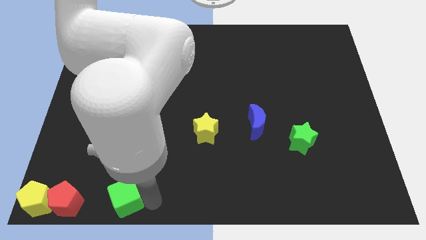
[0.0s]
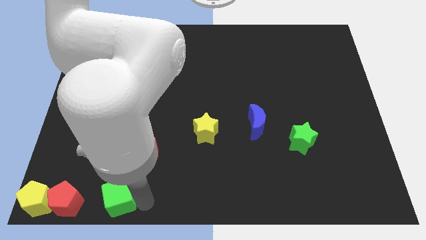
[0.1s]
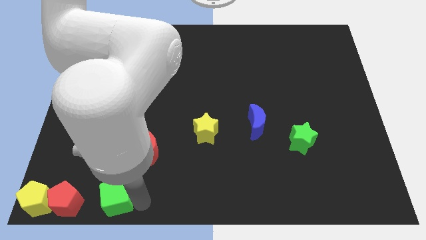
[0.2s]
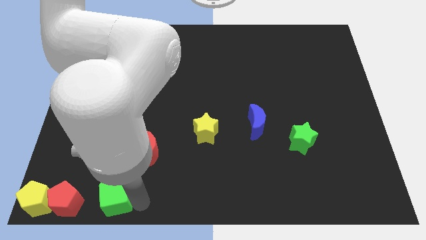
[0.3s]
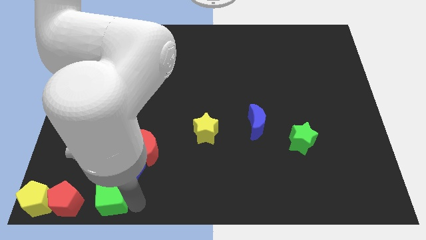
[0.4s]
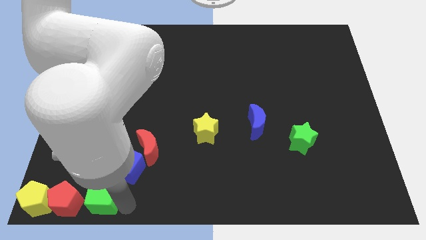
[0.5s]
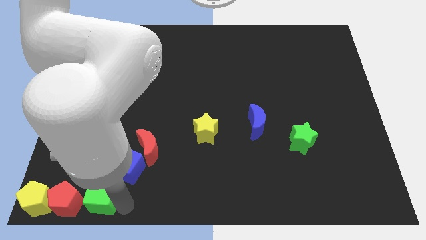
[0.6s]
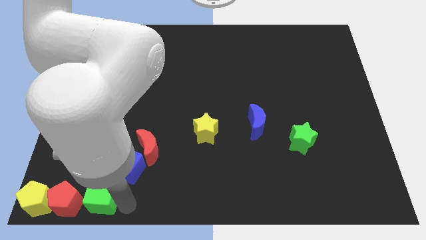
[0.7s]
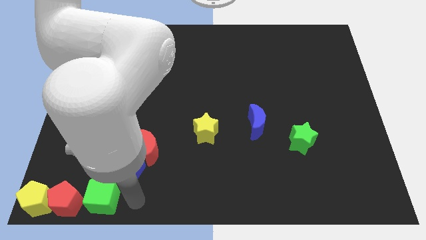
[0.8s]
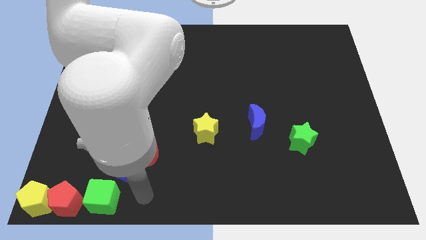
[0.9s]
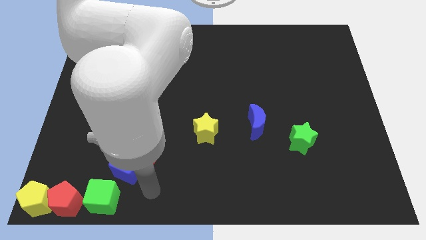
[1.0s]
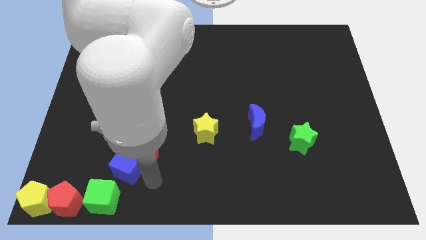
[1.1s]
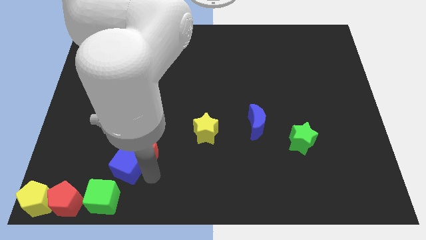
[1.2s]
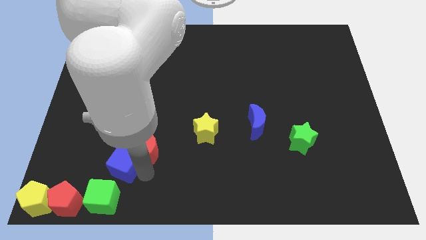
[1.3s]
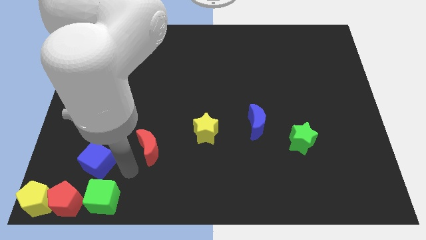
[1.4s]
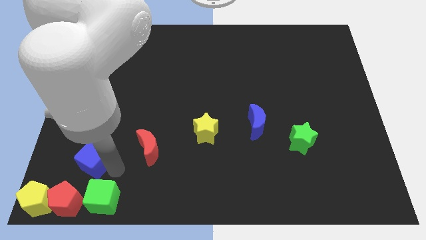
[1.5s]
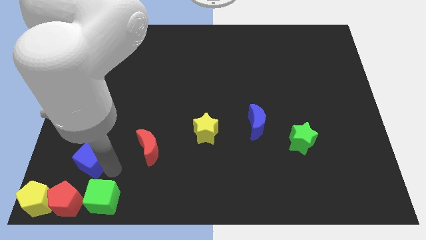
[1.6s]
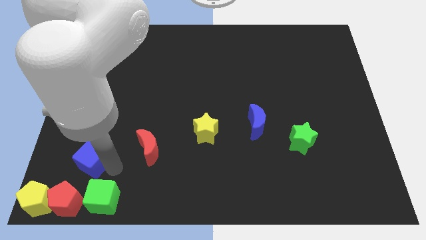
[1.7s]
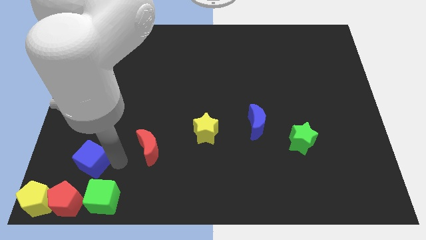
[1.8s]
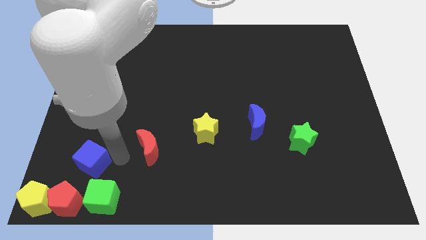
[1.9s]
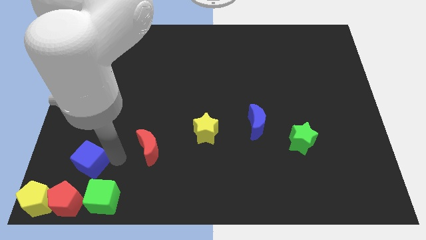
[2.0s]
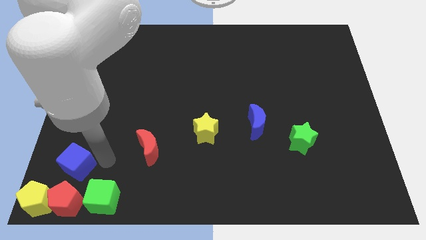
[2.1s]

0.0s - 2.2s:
separate the blue cube from the horizontal line

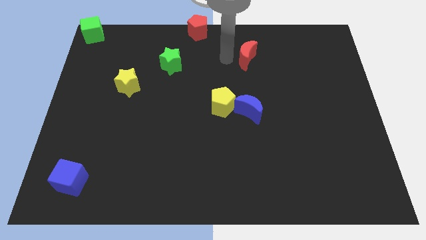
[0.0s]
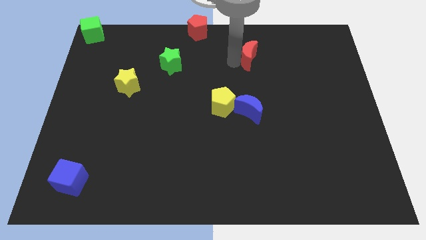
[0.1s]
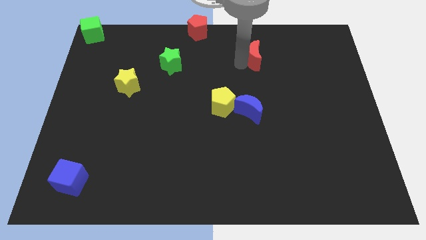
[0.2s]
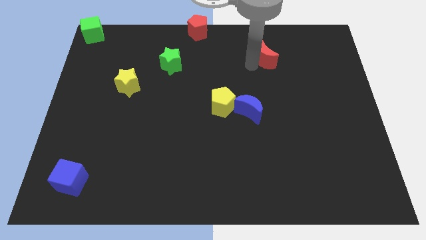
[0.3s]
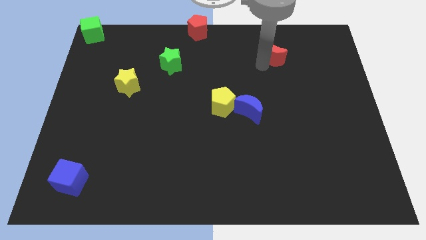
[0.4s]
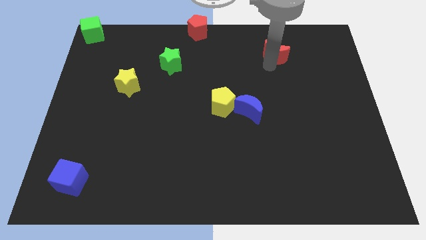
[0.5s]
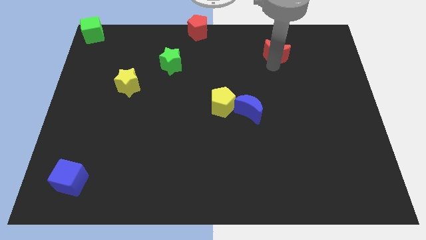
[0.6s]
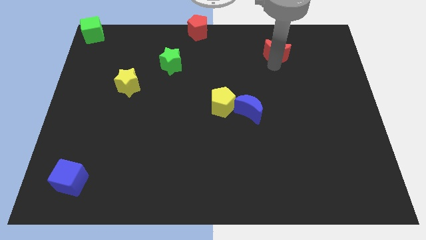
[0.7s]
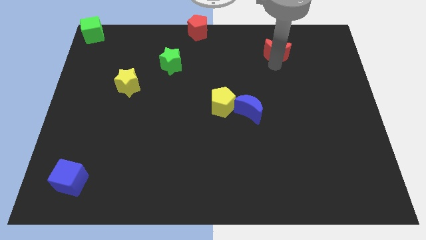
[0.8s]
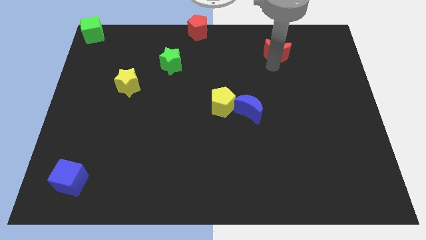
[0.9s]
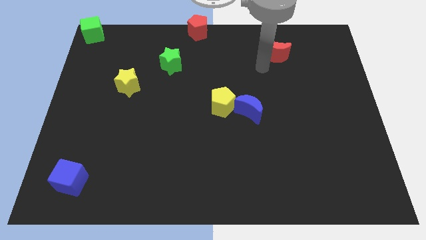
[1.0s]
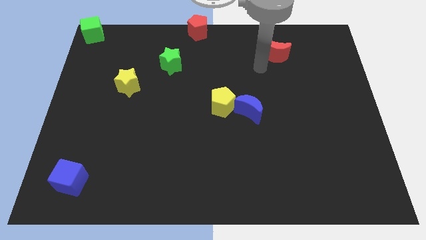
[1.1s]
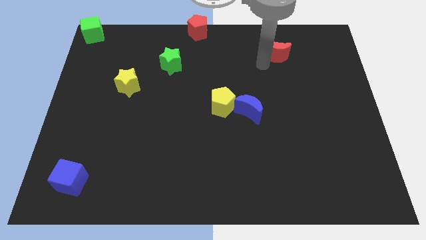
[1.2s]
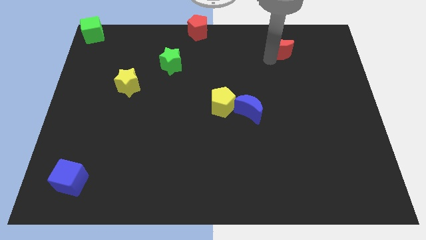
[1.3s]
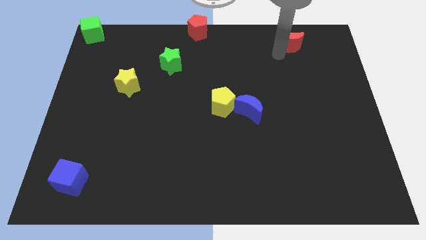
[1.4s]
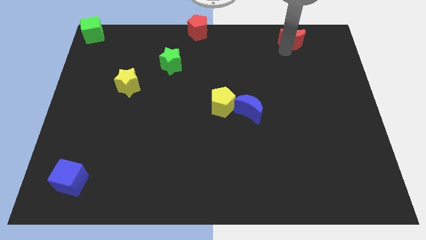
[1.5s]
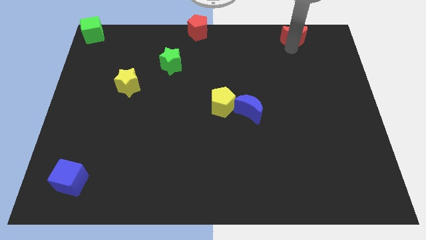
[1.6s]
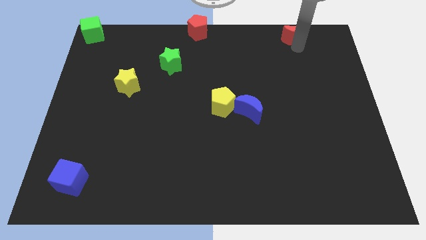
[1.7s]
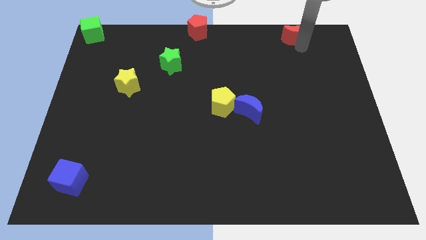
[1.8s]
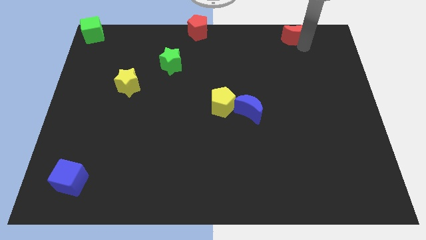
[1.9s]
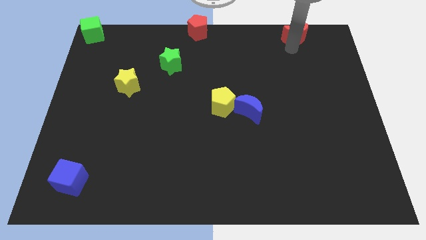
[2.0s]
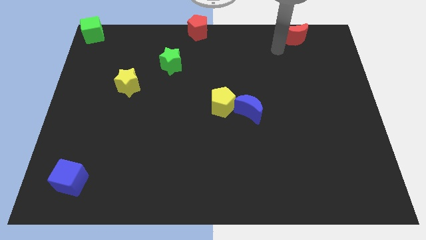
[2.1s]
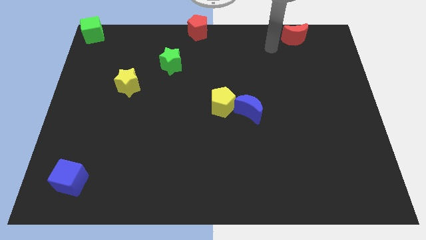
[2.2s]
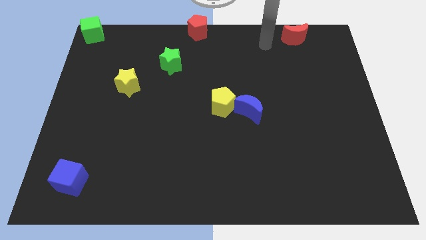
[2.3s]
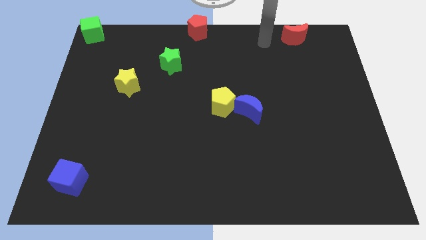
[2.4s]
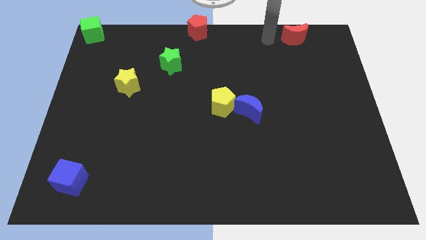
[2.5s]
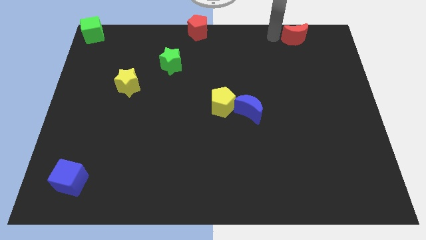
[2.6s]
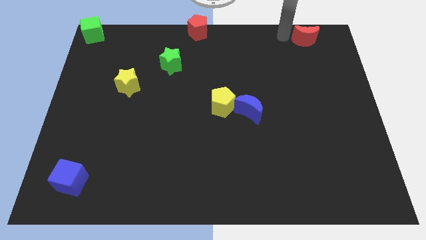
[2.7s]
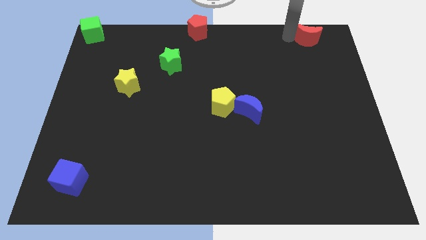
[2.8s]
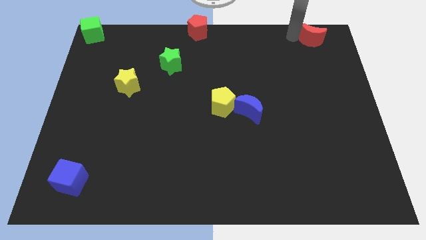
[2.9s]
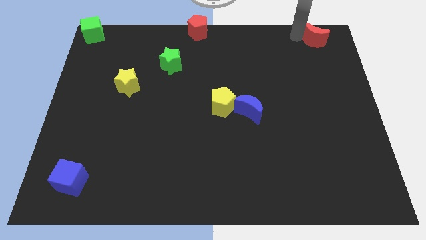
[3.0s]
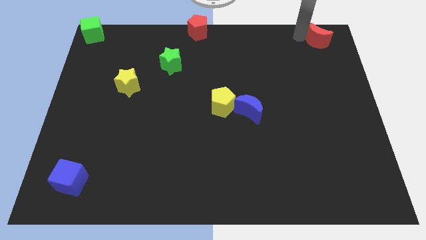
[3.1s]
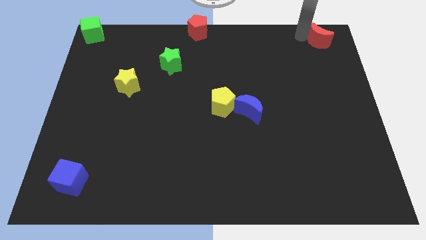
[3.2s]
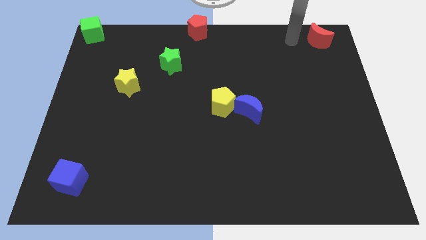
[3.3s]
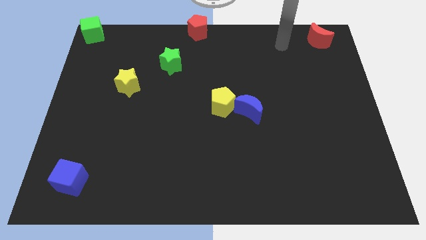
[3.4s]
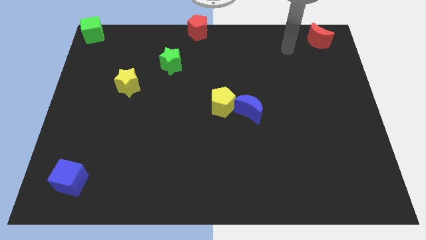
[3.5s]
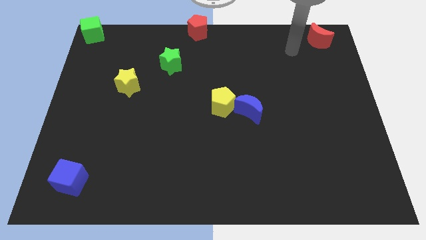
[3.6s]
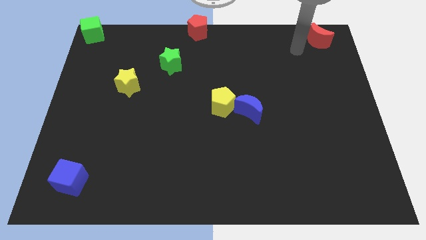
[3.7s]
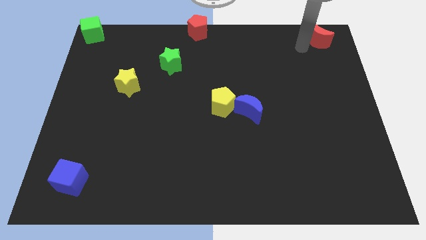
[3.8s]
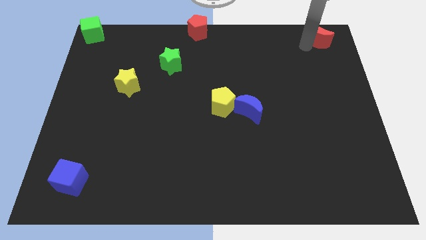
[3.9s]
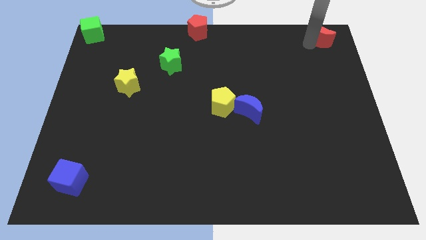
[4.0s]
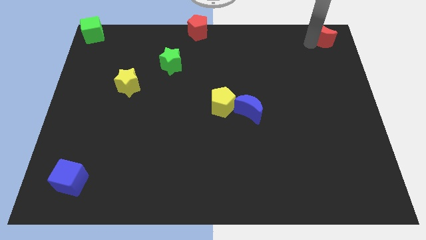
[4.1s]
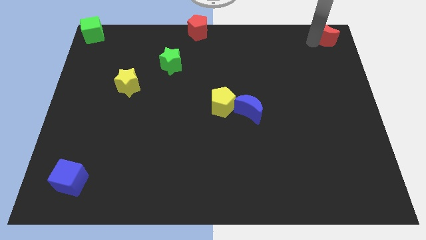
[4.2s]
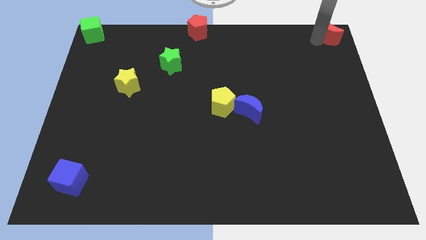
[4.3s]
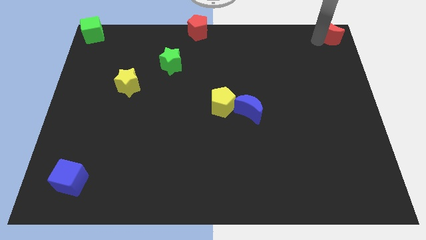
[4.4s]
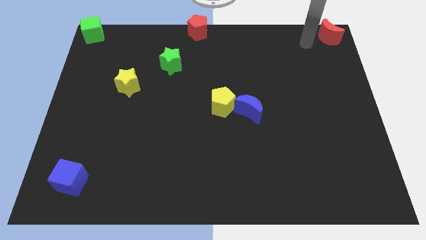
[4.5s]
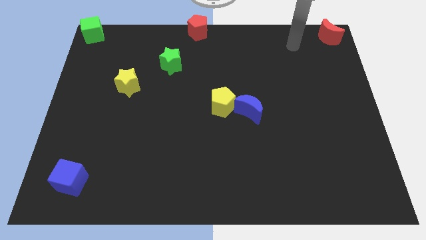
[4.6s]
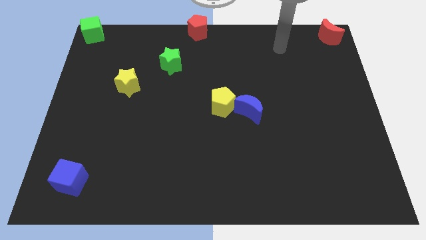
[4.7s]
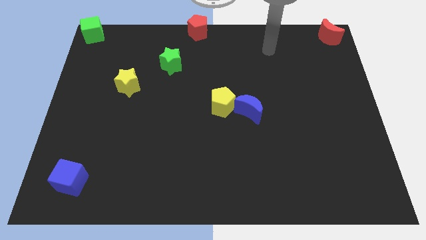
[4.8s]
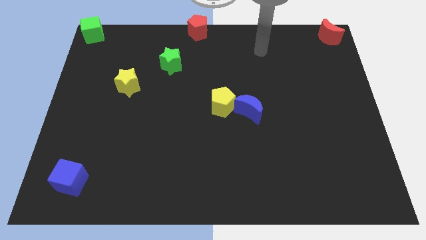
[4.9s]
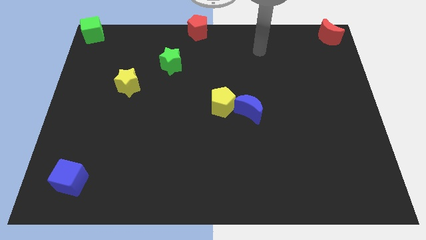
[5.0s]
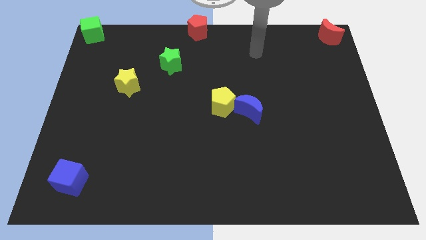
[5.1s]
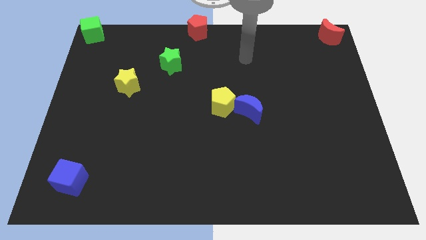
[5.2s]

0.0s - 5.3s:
move the red crescent to the top right of the board

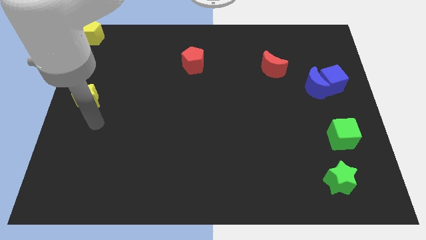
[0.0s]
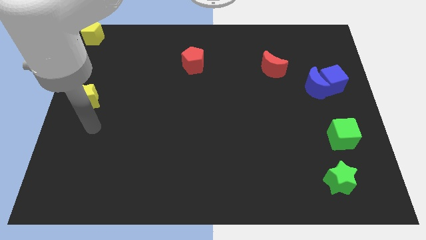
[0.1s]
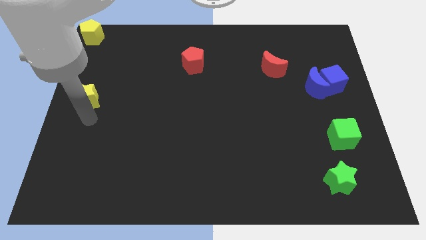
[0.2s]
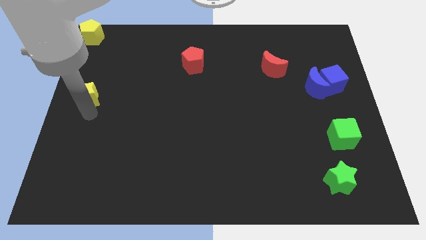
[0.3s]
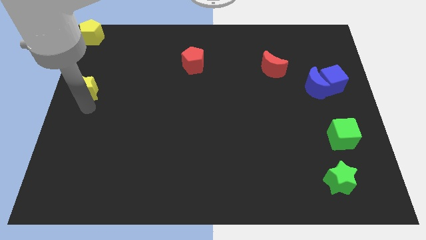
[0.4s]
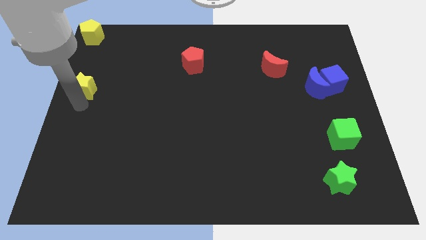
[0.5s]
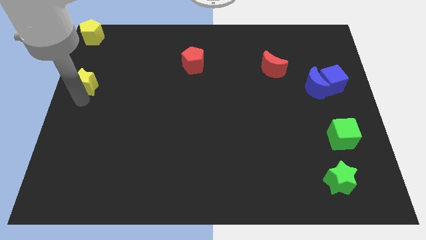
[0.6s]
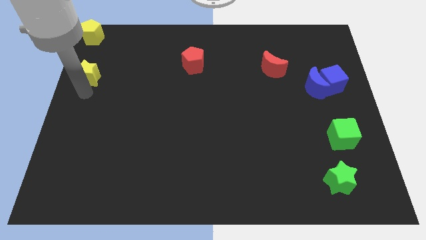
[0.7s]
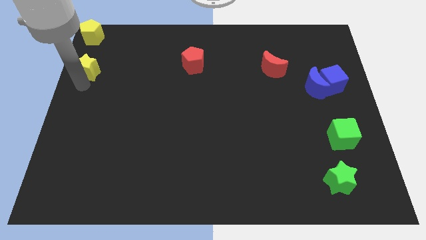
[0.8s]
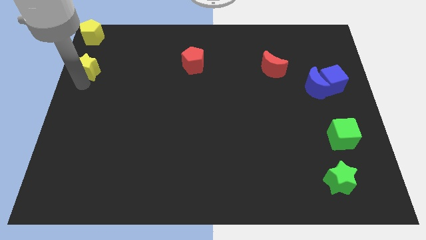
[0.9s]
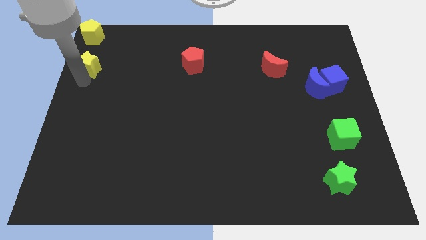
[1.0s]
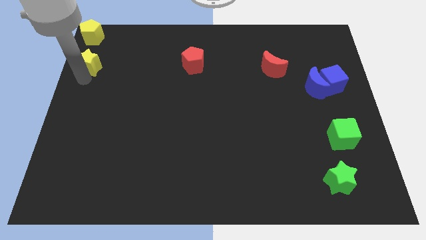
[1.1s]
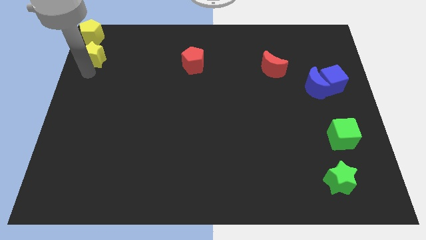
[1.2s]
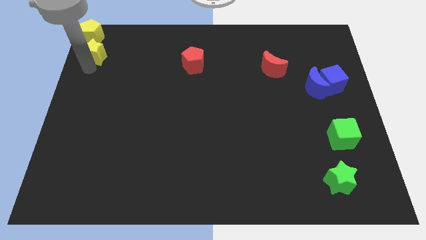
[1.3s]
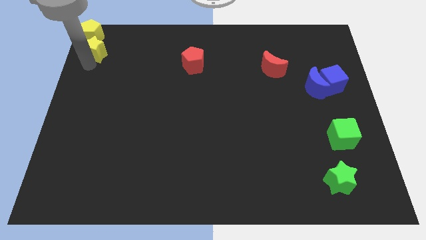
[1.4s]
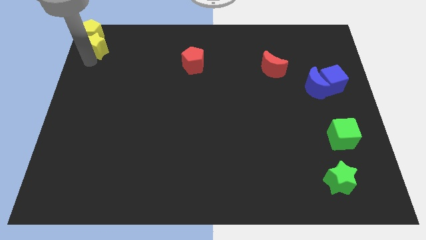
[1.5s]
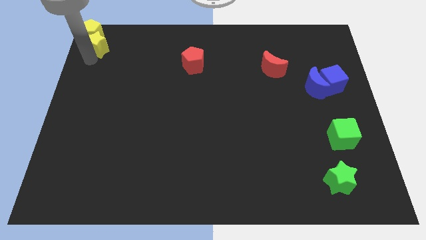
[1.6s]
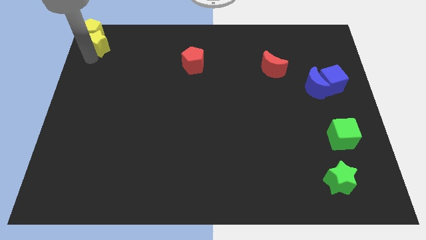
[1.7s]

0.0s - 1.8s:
push the yellow star into yellow pentagon
